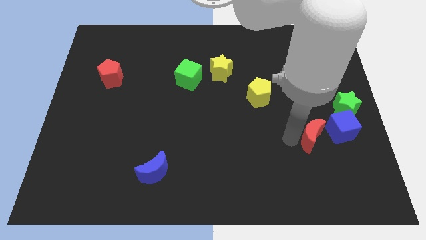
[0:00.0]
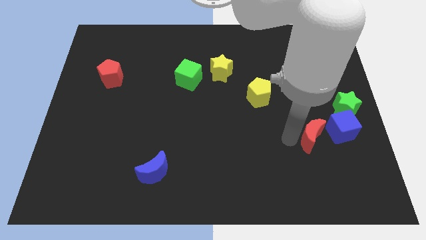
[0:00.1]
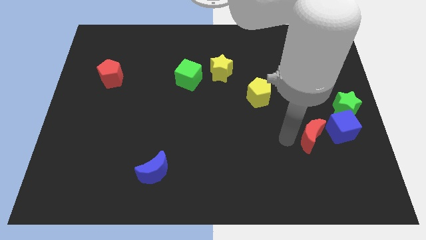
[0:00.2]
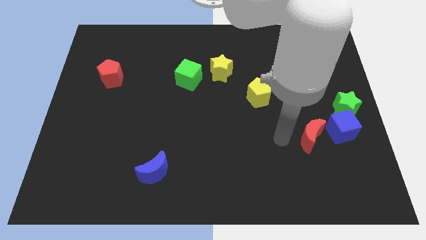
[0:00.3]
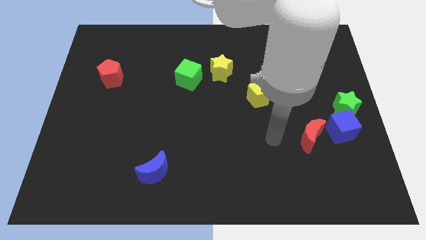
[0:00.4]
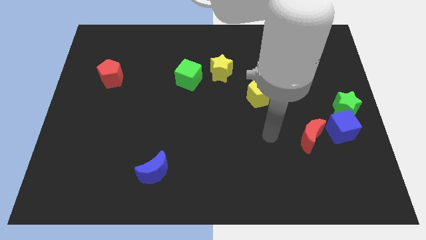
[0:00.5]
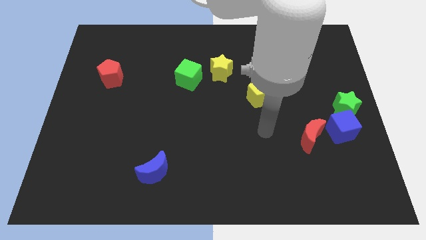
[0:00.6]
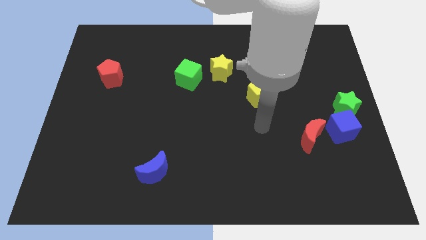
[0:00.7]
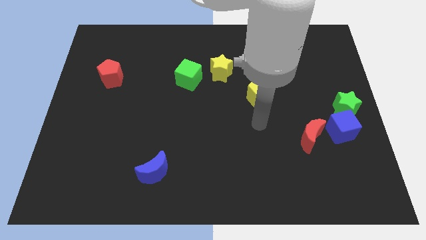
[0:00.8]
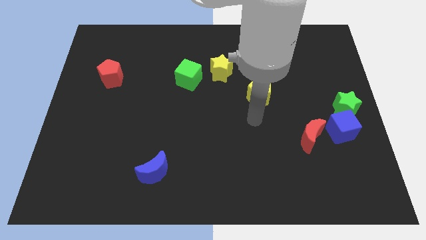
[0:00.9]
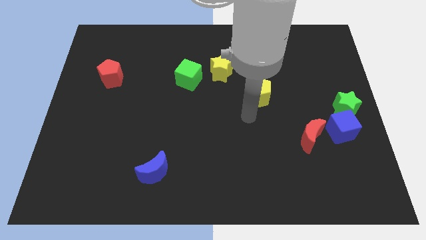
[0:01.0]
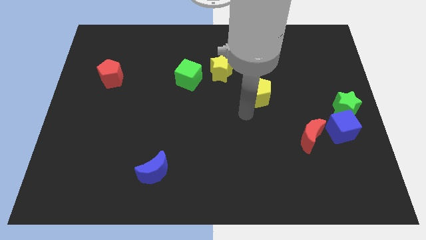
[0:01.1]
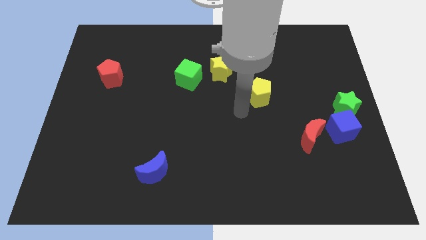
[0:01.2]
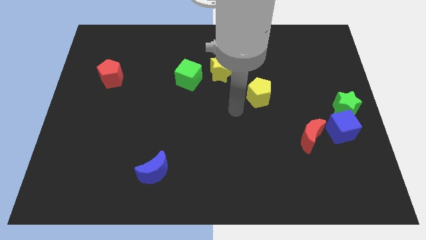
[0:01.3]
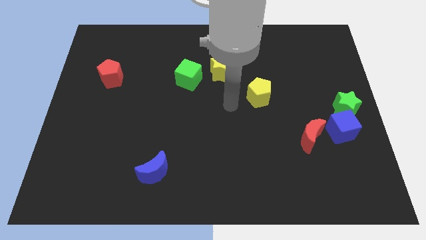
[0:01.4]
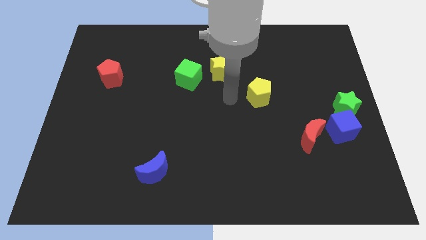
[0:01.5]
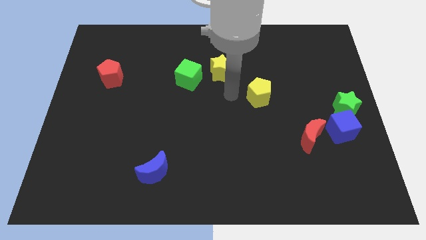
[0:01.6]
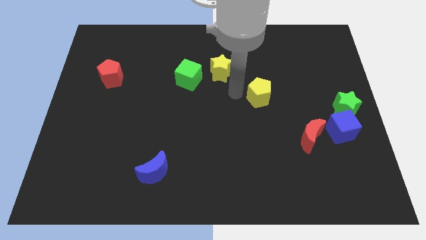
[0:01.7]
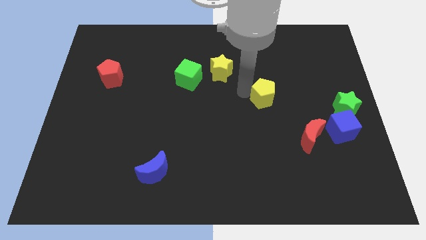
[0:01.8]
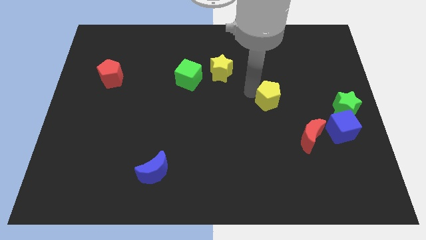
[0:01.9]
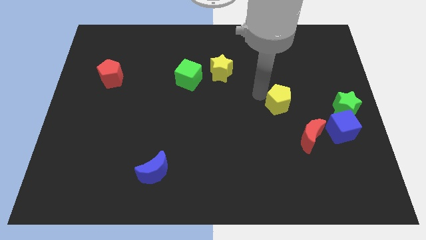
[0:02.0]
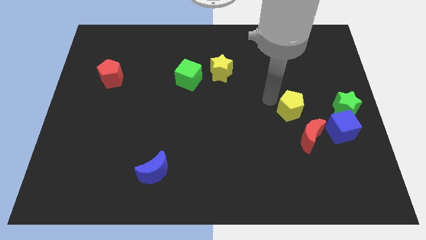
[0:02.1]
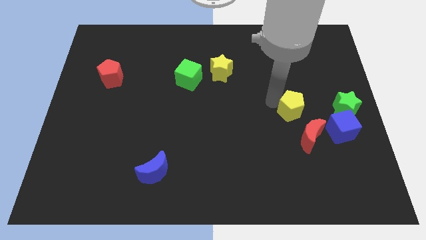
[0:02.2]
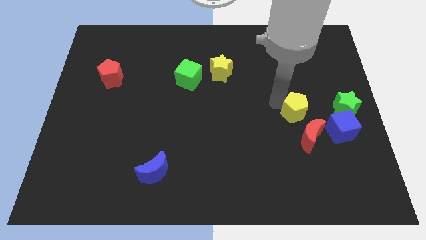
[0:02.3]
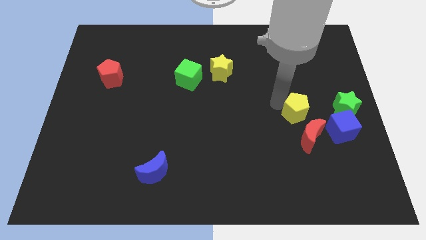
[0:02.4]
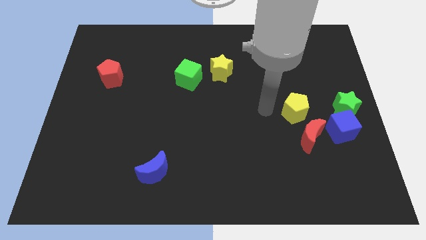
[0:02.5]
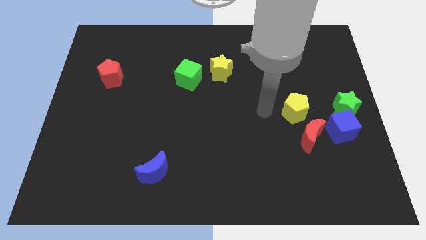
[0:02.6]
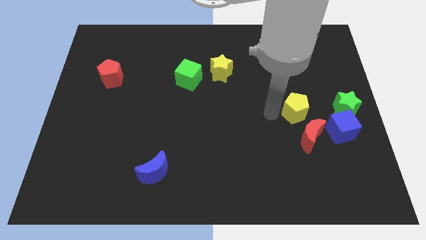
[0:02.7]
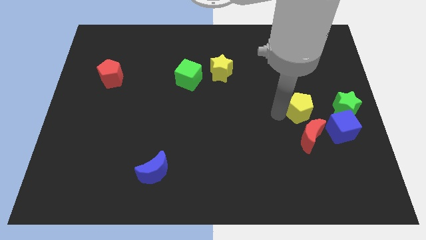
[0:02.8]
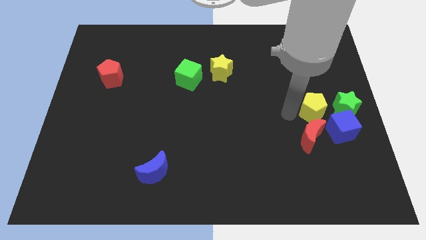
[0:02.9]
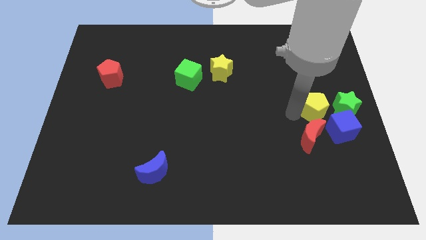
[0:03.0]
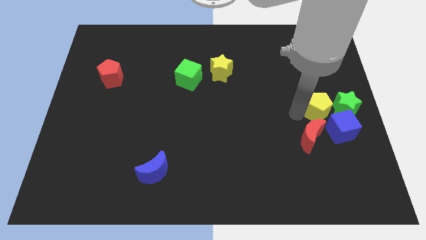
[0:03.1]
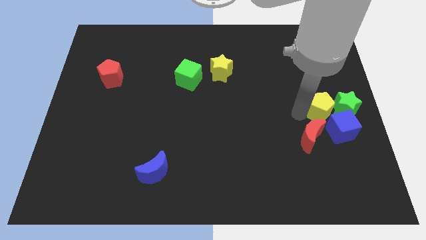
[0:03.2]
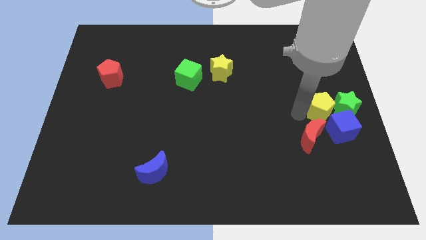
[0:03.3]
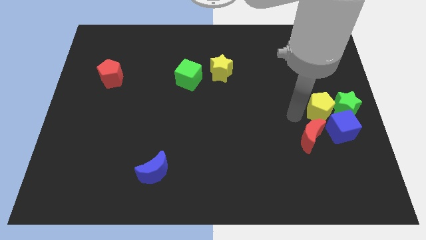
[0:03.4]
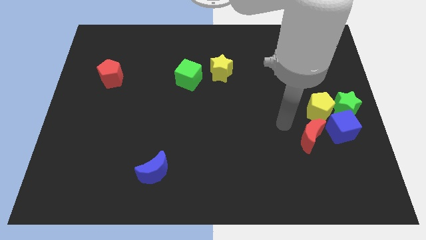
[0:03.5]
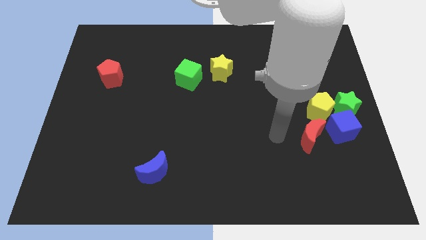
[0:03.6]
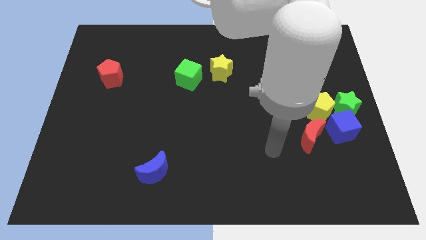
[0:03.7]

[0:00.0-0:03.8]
move the yellow pentagon close to the left side of the green star

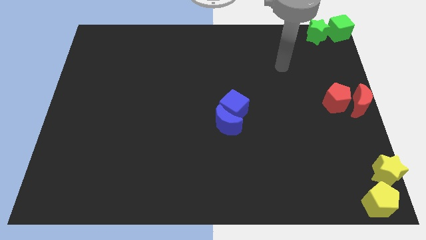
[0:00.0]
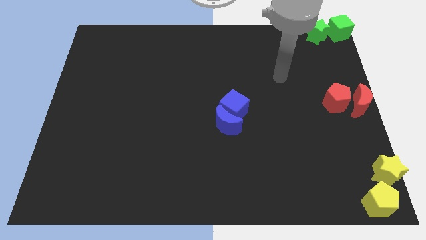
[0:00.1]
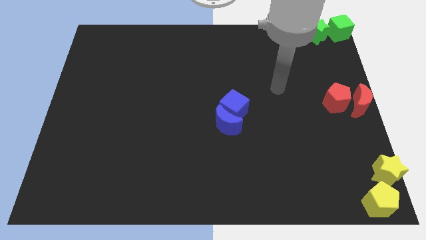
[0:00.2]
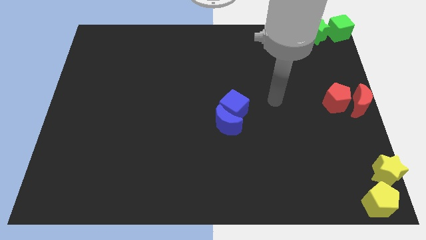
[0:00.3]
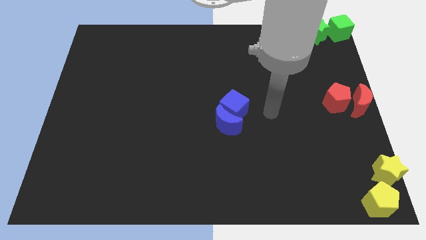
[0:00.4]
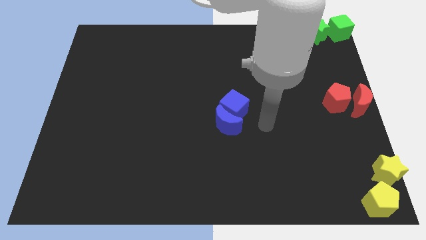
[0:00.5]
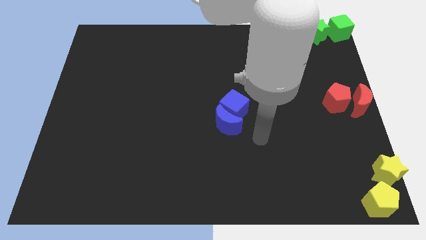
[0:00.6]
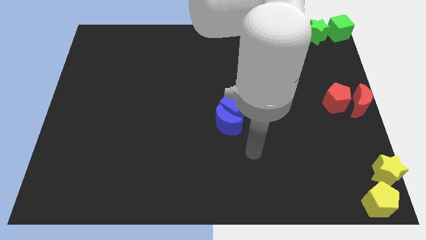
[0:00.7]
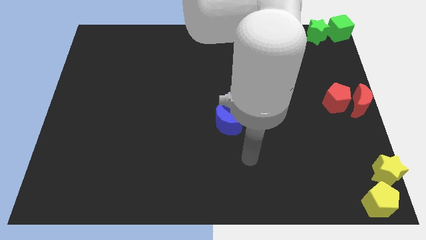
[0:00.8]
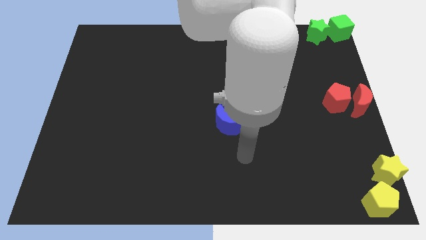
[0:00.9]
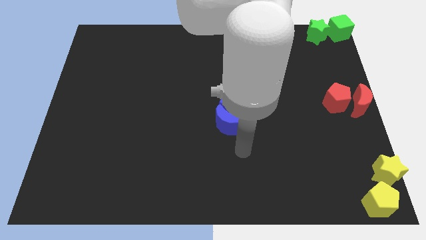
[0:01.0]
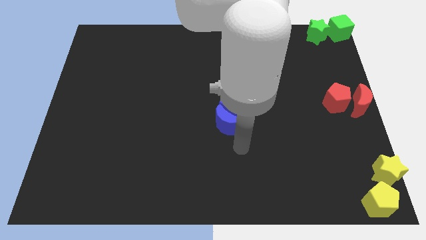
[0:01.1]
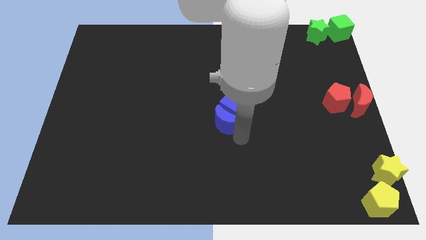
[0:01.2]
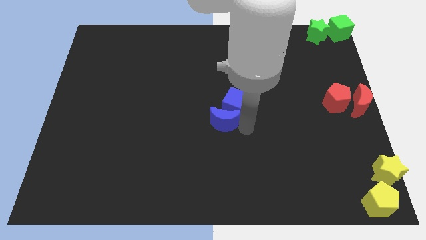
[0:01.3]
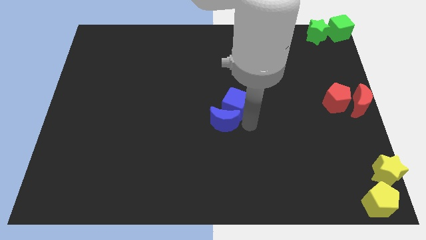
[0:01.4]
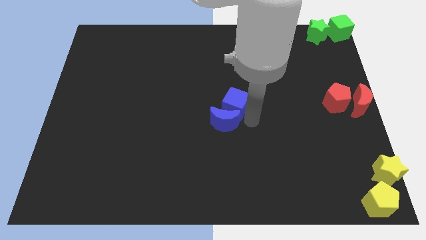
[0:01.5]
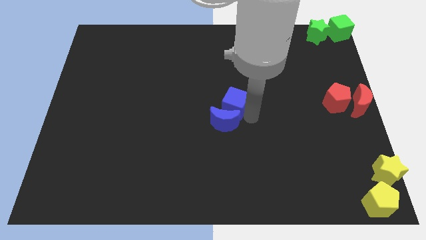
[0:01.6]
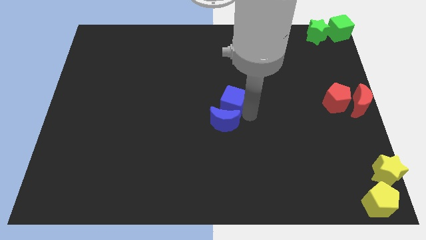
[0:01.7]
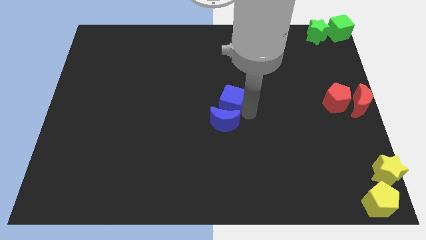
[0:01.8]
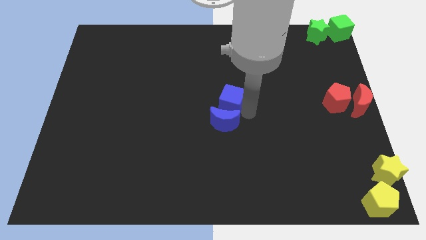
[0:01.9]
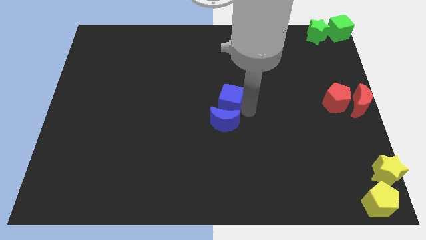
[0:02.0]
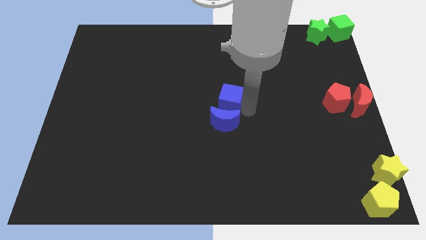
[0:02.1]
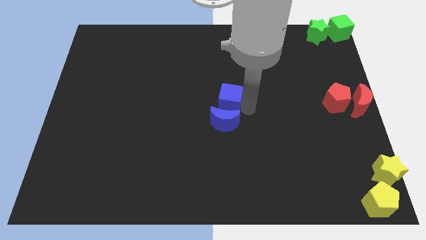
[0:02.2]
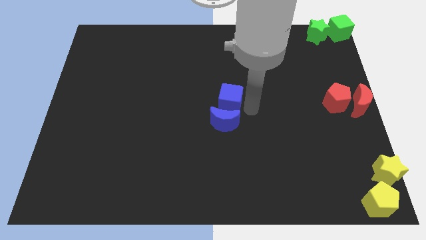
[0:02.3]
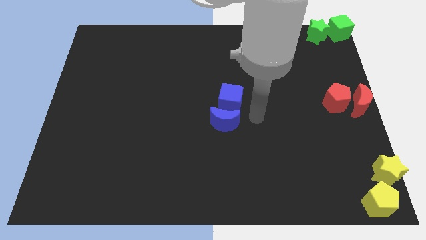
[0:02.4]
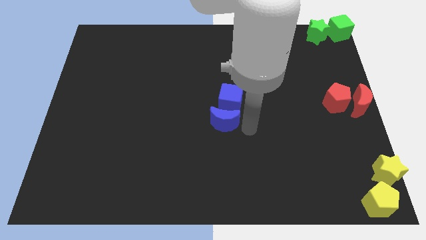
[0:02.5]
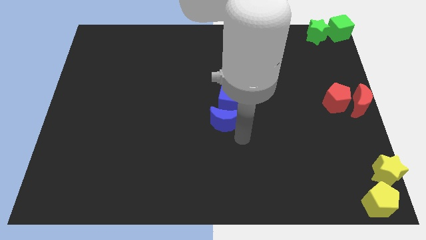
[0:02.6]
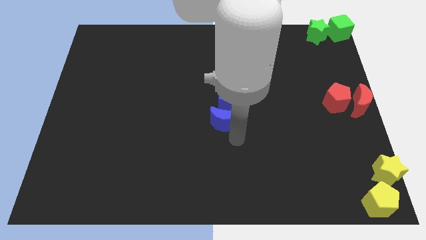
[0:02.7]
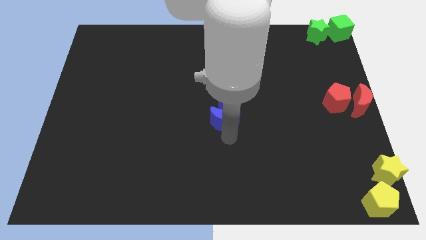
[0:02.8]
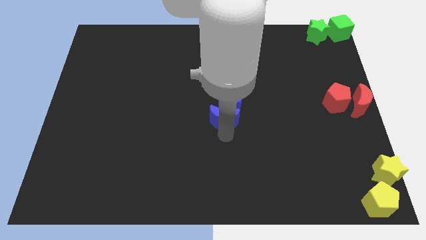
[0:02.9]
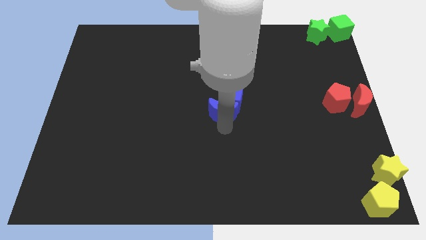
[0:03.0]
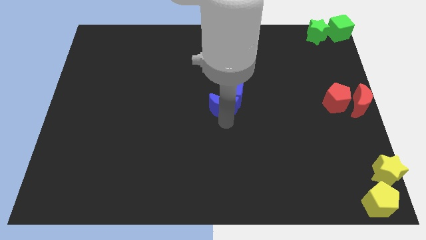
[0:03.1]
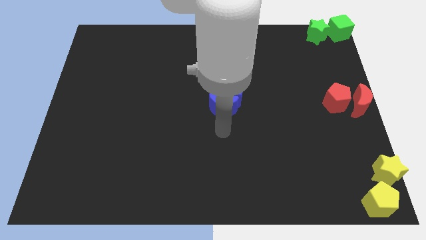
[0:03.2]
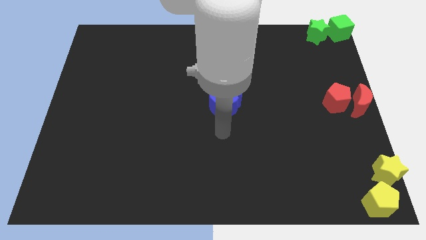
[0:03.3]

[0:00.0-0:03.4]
move both the blue blocks horizontally to the left side of the red blocks

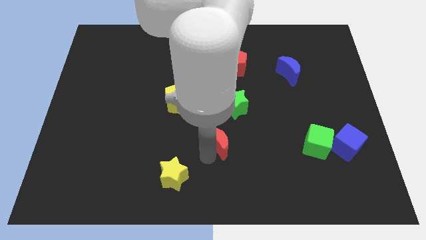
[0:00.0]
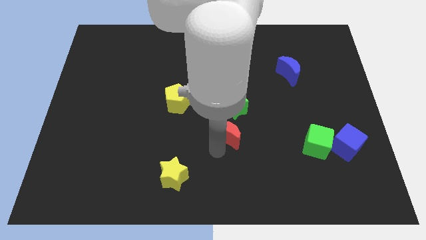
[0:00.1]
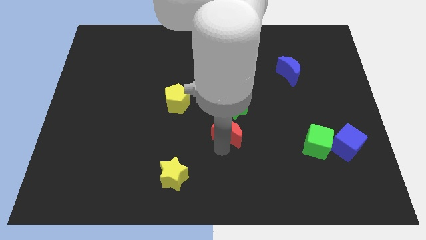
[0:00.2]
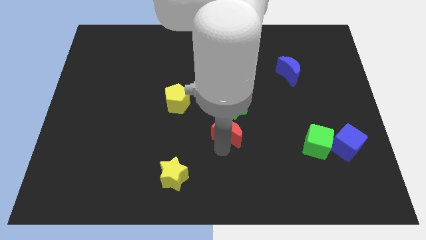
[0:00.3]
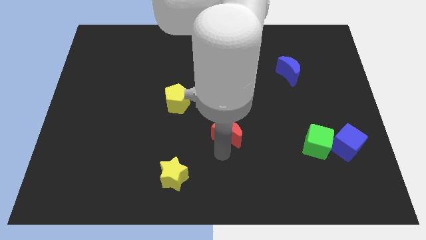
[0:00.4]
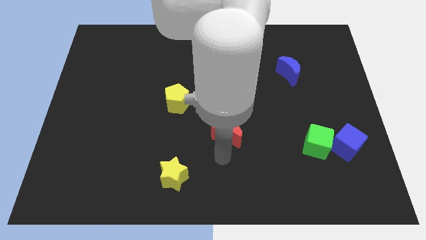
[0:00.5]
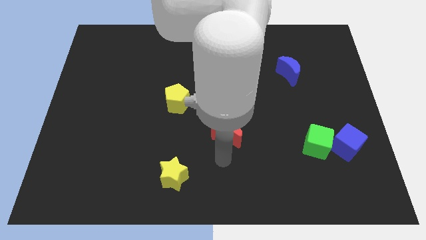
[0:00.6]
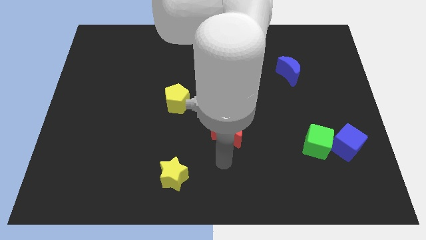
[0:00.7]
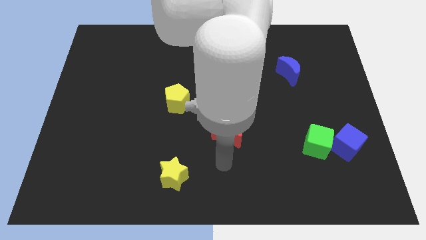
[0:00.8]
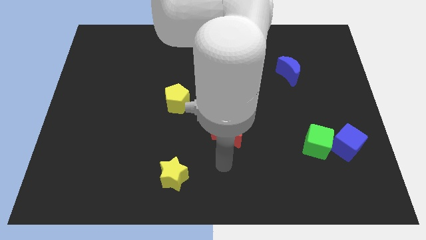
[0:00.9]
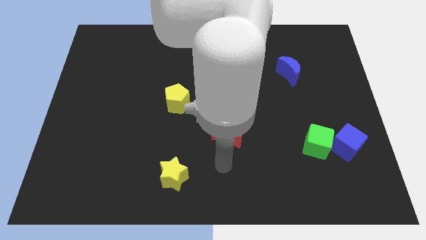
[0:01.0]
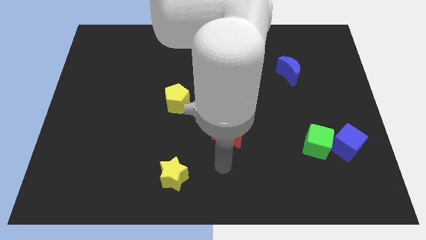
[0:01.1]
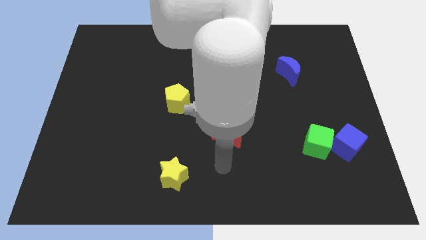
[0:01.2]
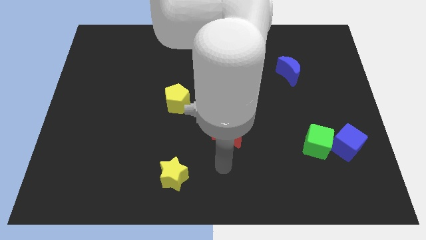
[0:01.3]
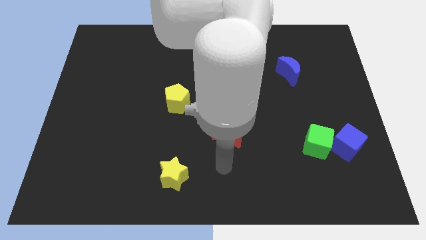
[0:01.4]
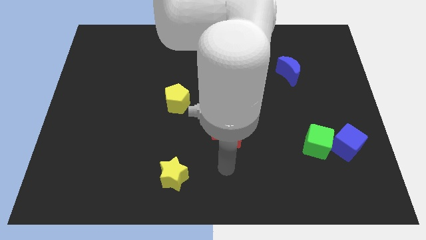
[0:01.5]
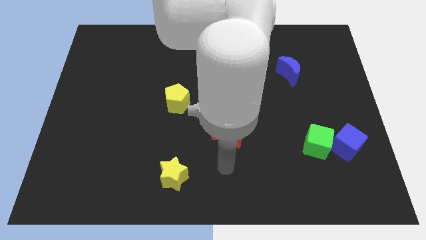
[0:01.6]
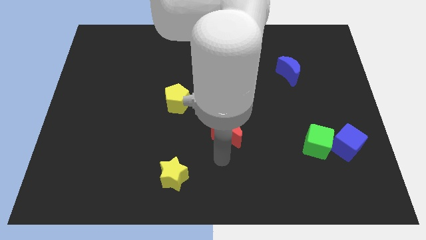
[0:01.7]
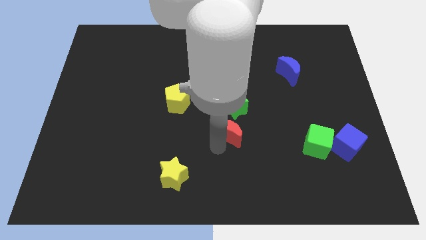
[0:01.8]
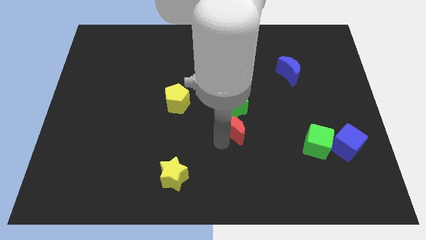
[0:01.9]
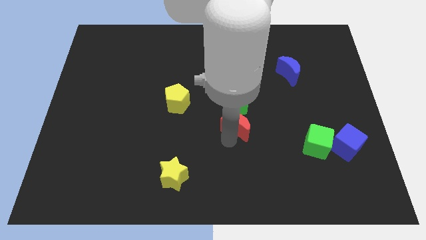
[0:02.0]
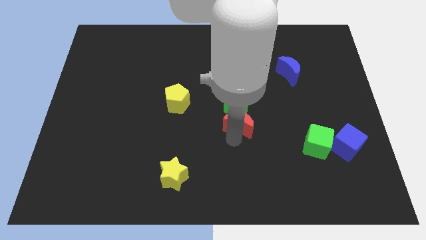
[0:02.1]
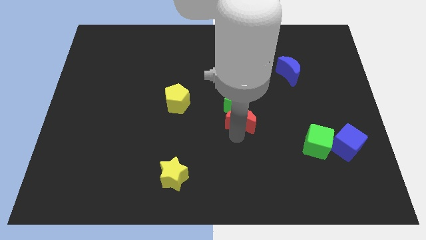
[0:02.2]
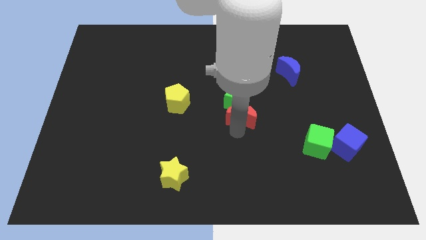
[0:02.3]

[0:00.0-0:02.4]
move red moon into green star
